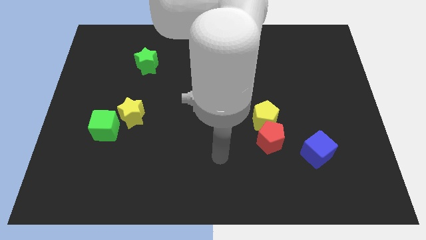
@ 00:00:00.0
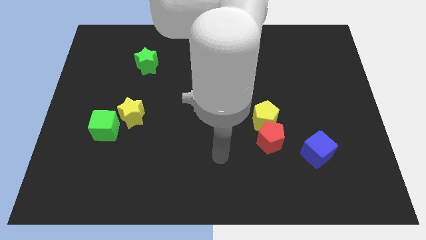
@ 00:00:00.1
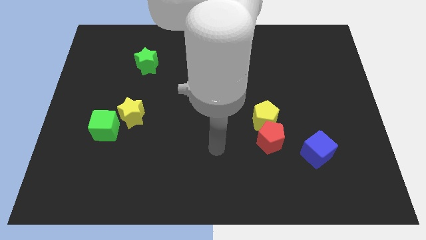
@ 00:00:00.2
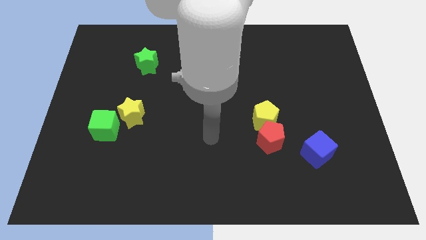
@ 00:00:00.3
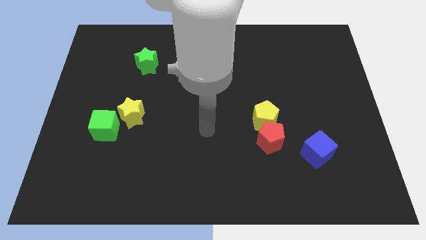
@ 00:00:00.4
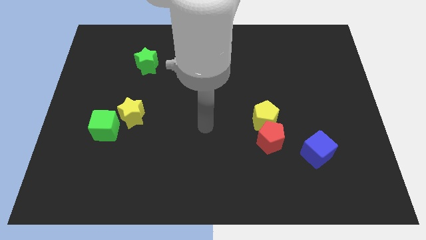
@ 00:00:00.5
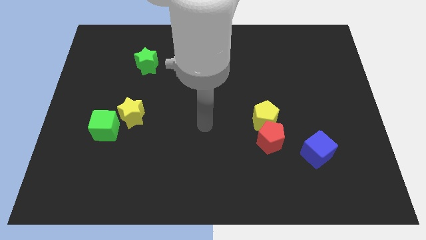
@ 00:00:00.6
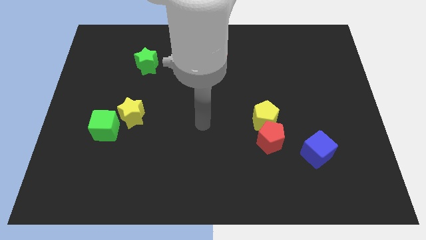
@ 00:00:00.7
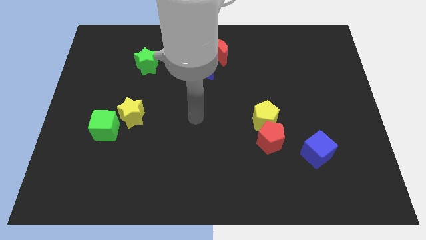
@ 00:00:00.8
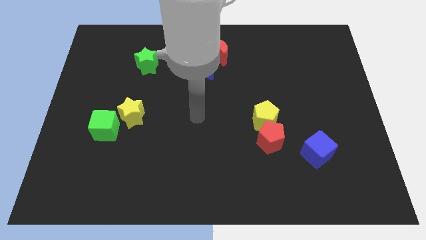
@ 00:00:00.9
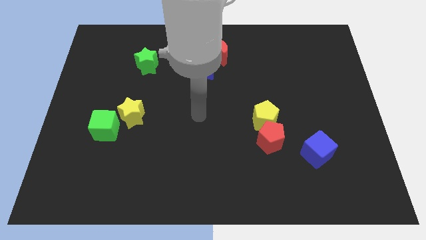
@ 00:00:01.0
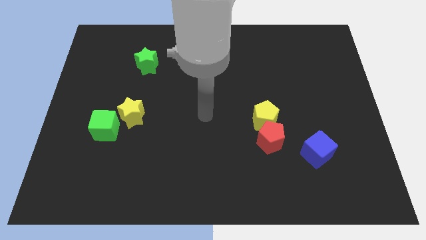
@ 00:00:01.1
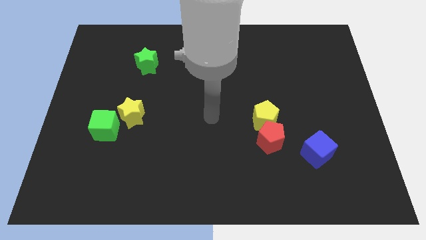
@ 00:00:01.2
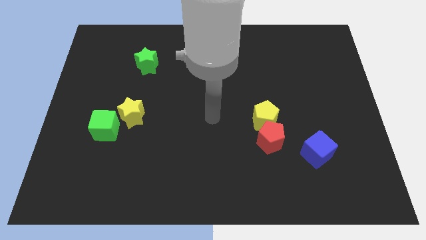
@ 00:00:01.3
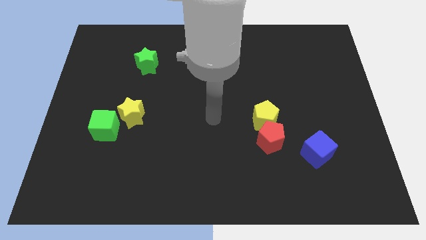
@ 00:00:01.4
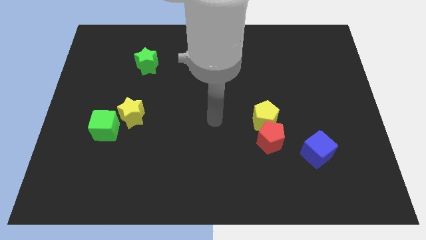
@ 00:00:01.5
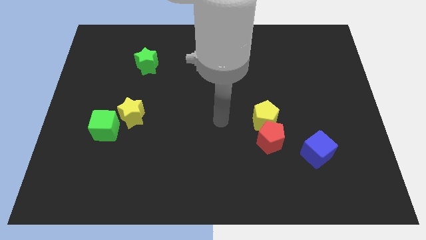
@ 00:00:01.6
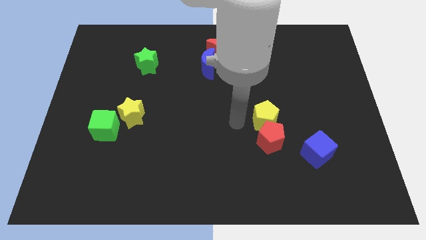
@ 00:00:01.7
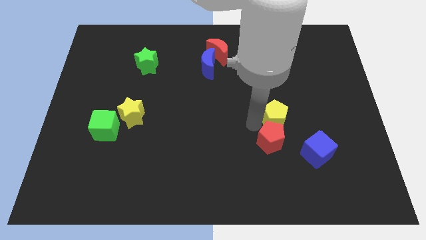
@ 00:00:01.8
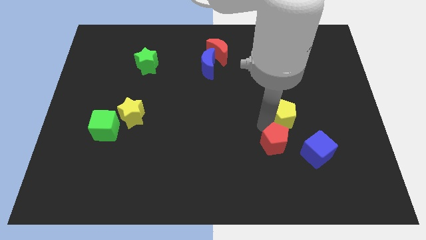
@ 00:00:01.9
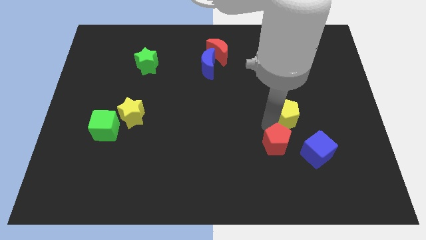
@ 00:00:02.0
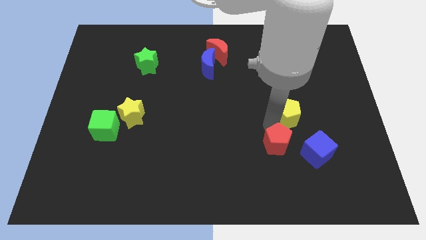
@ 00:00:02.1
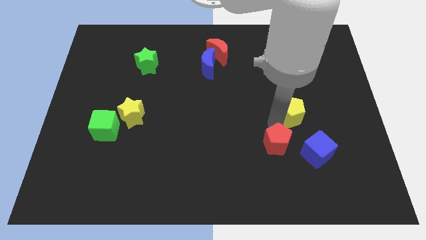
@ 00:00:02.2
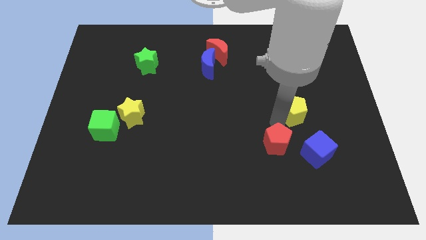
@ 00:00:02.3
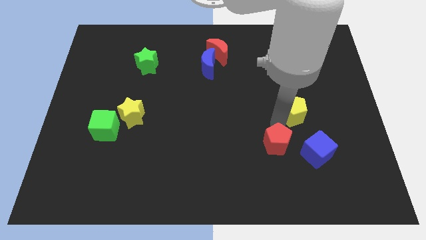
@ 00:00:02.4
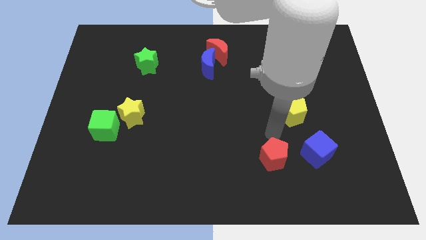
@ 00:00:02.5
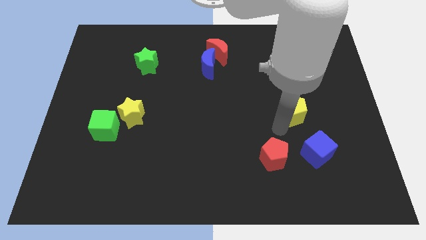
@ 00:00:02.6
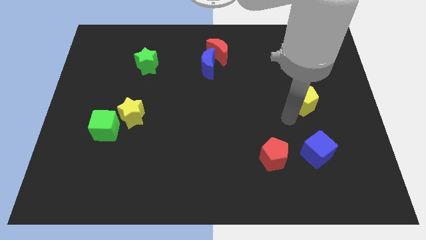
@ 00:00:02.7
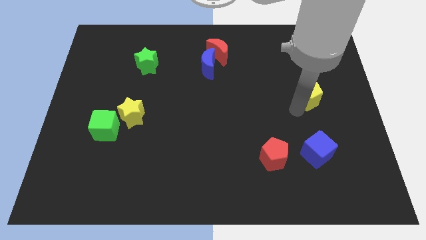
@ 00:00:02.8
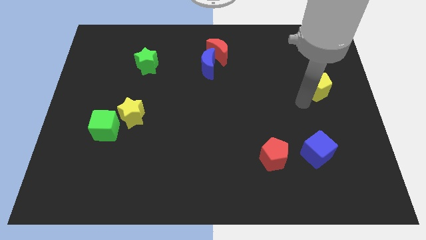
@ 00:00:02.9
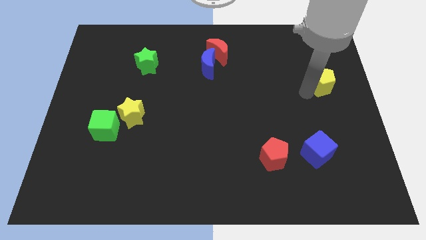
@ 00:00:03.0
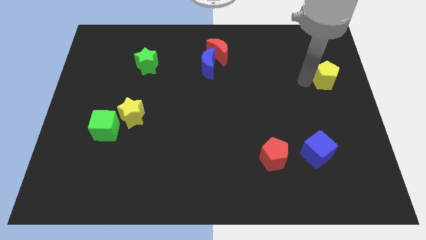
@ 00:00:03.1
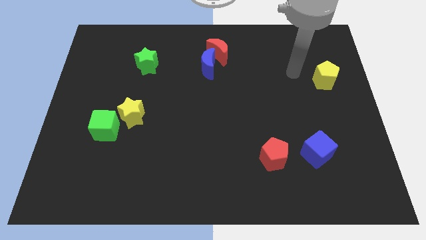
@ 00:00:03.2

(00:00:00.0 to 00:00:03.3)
push the red pentagon and yellow pentagon away from each other

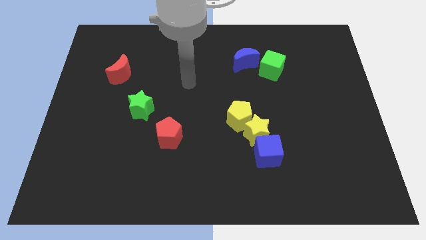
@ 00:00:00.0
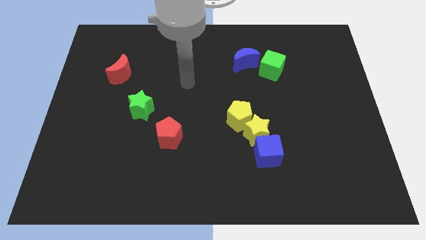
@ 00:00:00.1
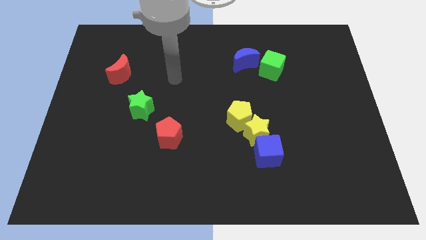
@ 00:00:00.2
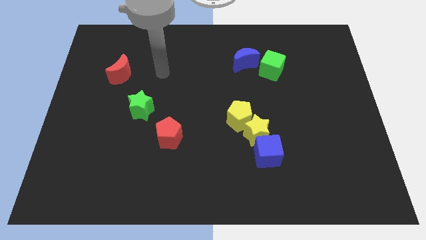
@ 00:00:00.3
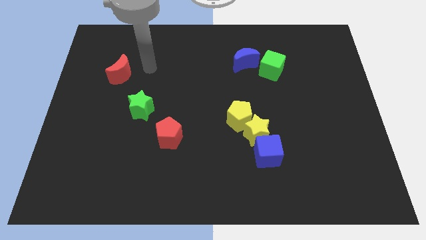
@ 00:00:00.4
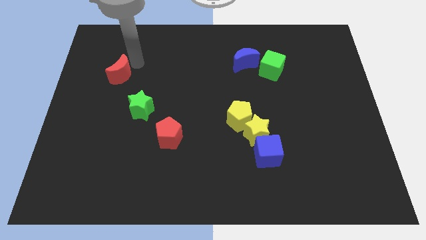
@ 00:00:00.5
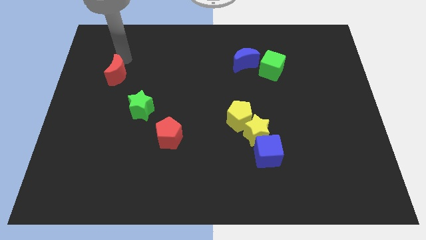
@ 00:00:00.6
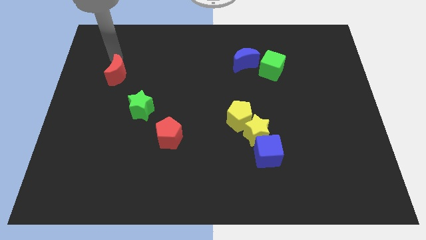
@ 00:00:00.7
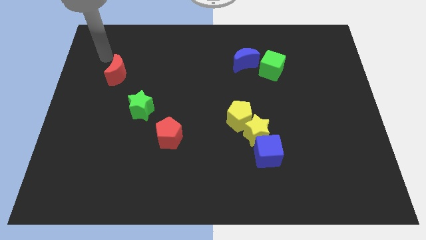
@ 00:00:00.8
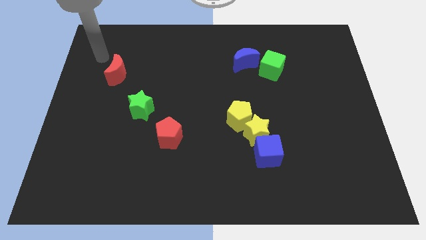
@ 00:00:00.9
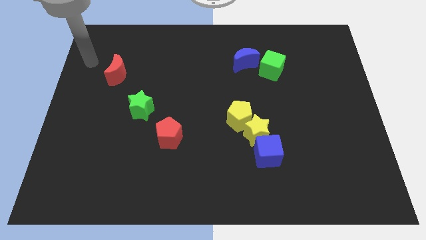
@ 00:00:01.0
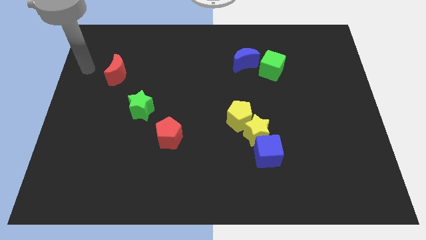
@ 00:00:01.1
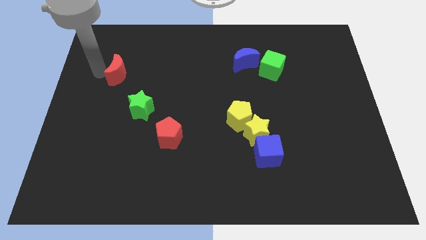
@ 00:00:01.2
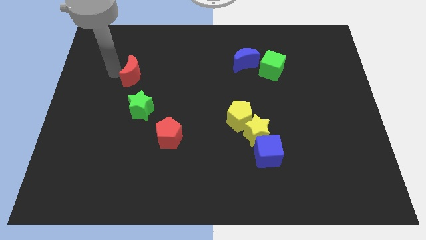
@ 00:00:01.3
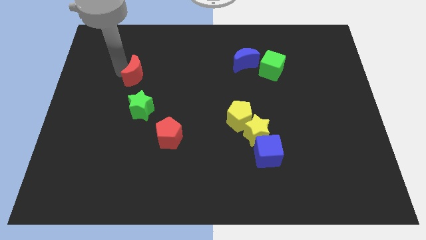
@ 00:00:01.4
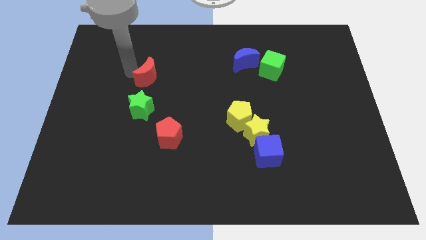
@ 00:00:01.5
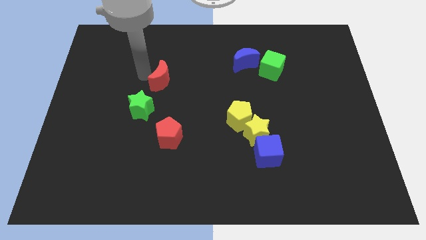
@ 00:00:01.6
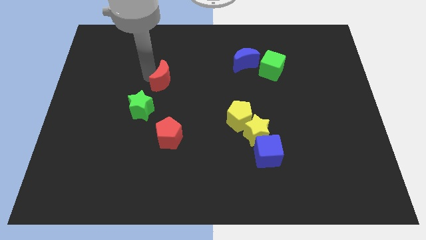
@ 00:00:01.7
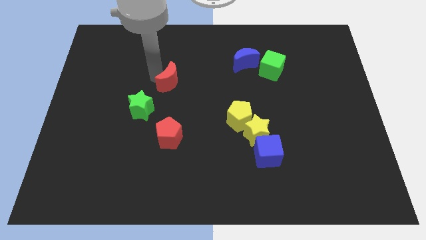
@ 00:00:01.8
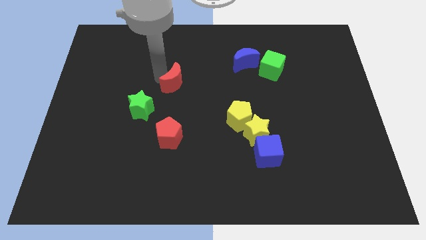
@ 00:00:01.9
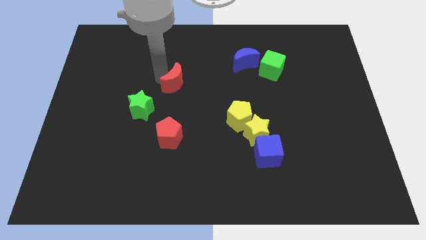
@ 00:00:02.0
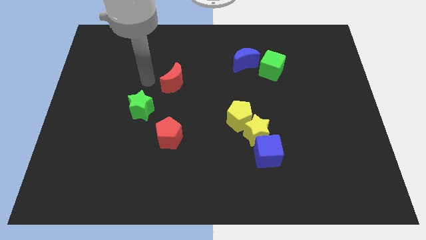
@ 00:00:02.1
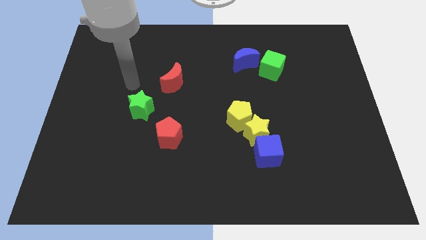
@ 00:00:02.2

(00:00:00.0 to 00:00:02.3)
move the red crescent diagonally right to green star

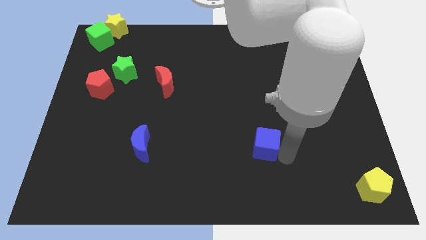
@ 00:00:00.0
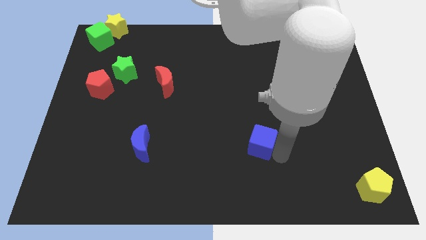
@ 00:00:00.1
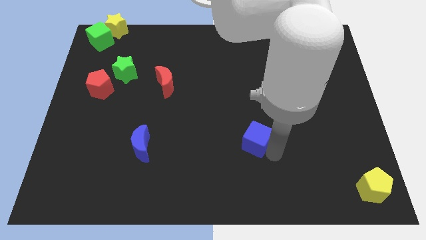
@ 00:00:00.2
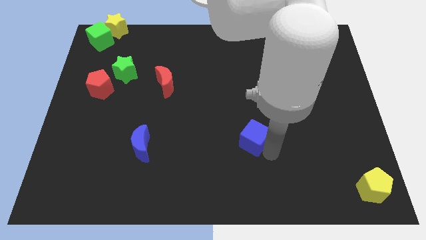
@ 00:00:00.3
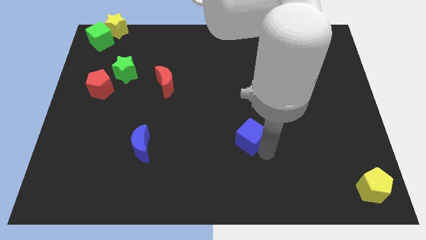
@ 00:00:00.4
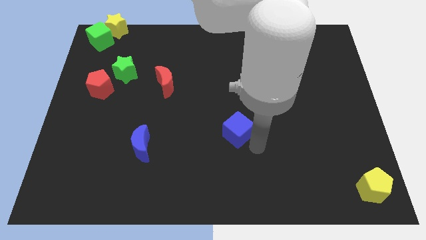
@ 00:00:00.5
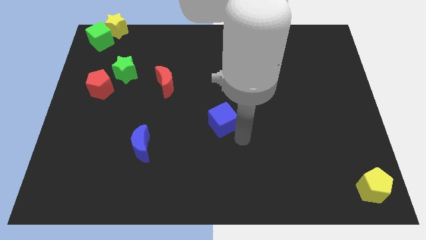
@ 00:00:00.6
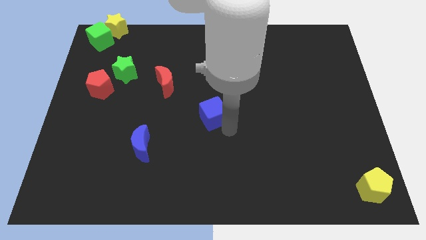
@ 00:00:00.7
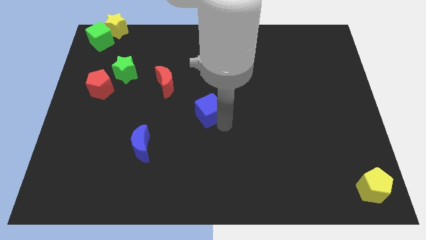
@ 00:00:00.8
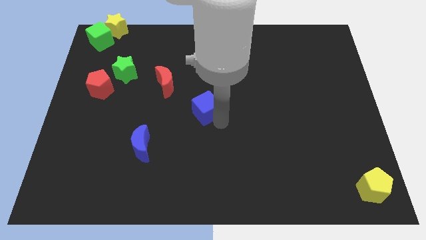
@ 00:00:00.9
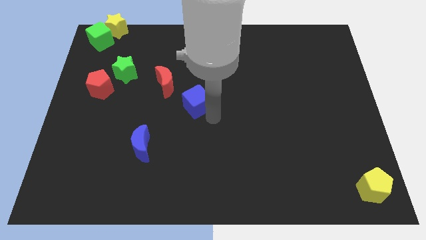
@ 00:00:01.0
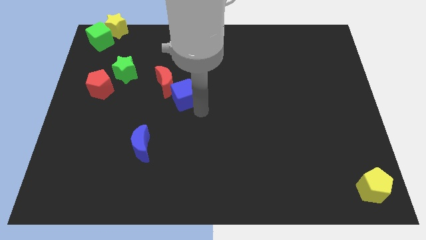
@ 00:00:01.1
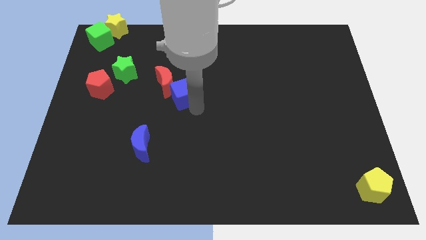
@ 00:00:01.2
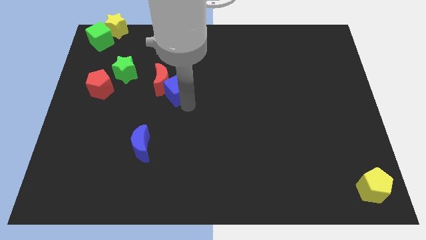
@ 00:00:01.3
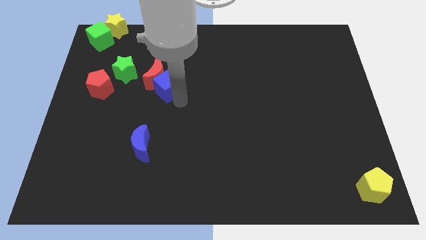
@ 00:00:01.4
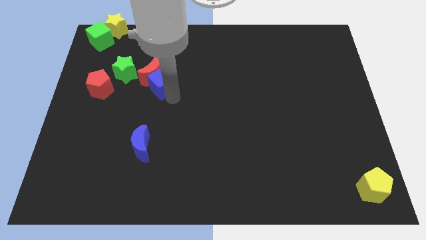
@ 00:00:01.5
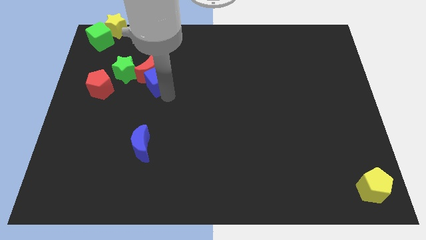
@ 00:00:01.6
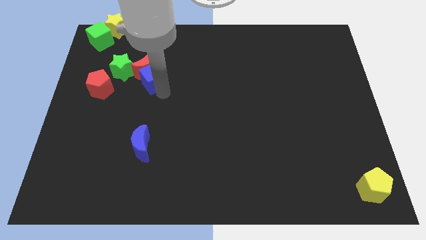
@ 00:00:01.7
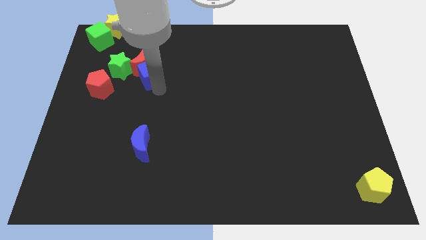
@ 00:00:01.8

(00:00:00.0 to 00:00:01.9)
push the blue cube into the red moon

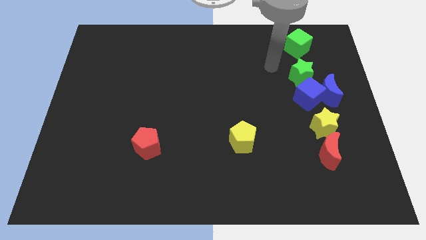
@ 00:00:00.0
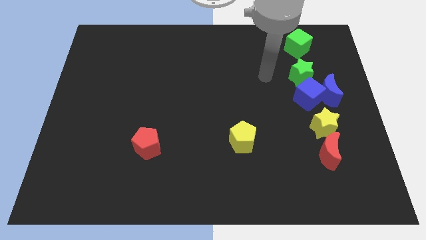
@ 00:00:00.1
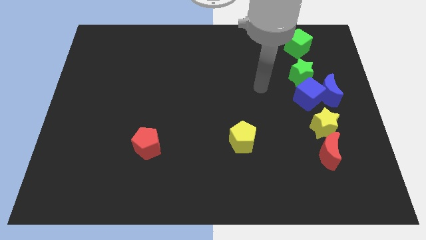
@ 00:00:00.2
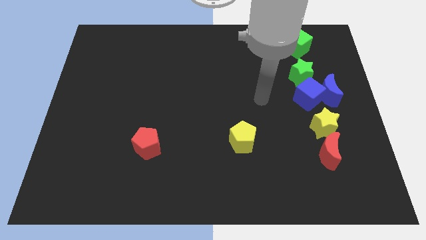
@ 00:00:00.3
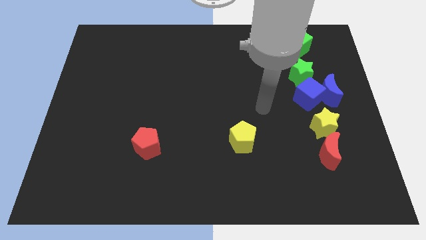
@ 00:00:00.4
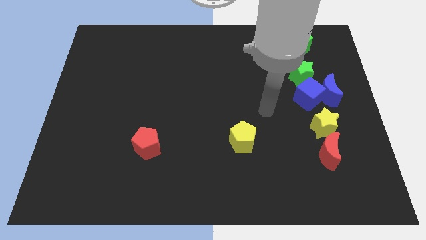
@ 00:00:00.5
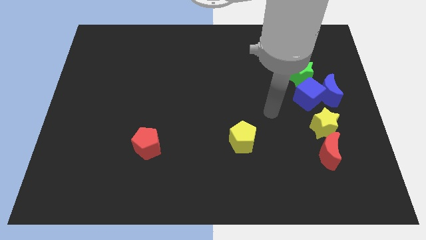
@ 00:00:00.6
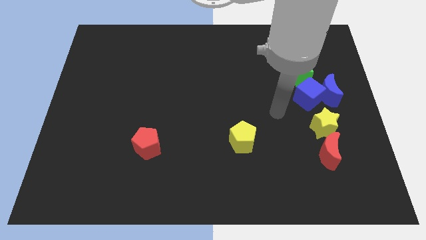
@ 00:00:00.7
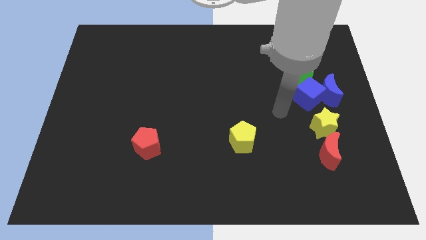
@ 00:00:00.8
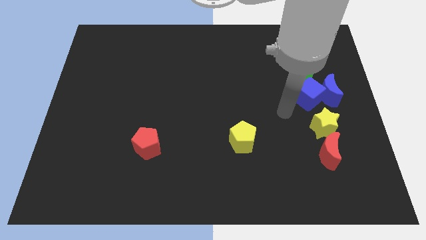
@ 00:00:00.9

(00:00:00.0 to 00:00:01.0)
move your arm towards the blue cube

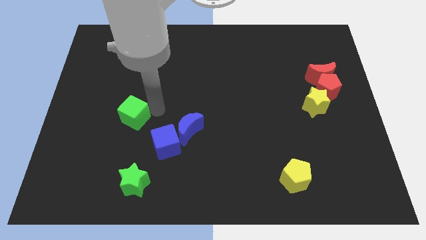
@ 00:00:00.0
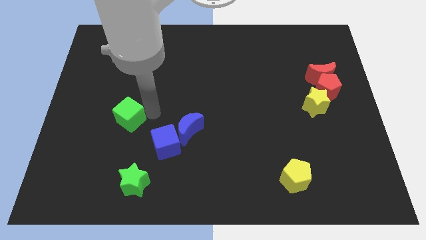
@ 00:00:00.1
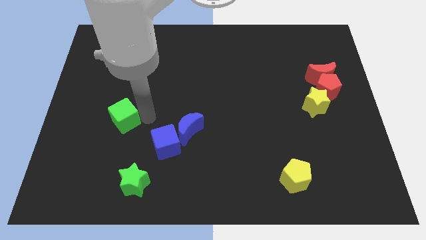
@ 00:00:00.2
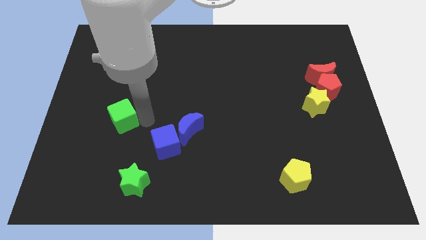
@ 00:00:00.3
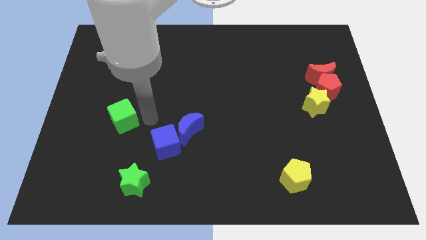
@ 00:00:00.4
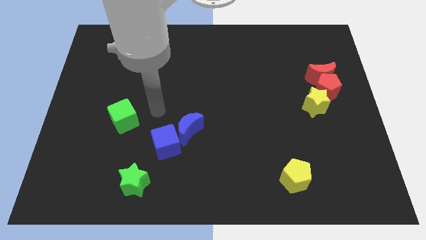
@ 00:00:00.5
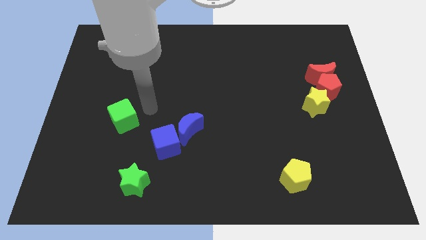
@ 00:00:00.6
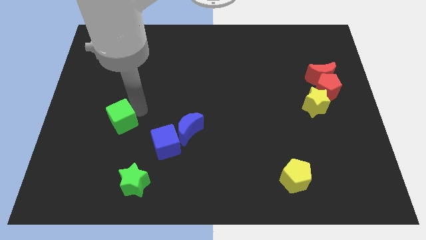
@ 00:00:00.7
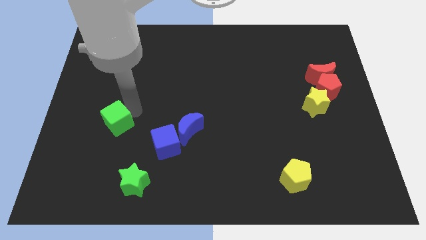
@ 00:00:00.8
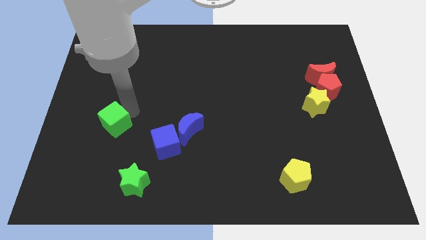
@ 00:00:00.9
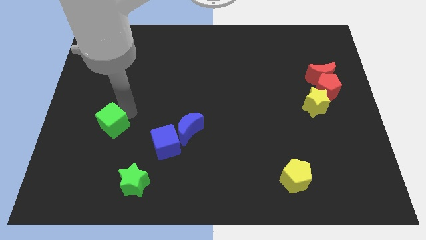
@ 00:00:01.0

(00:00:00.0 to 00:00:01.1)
slide the green cube diagonally top left of the board
